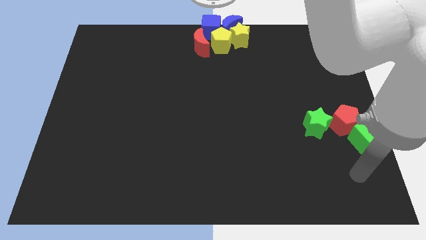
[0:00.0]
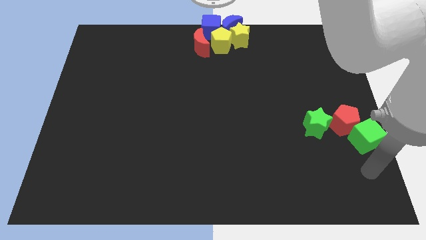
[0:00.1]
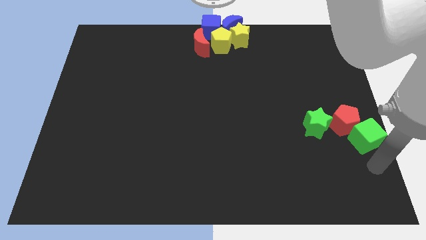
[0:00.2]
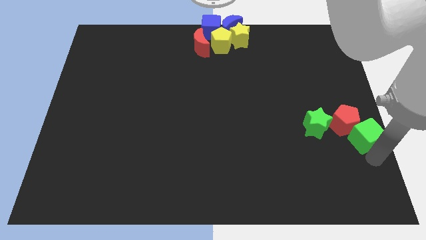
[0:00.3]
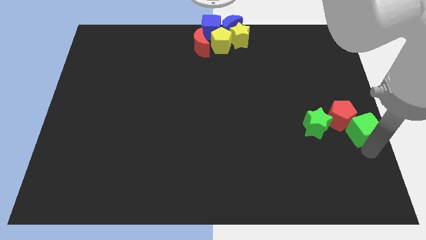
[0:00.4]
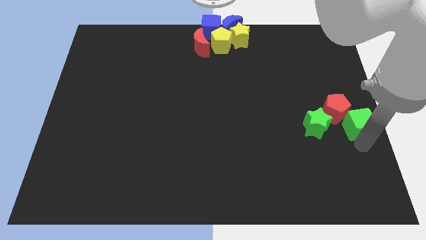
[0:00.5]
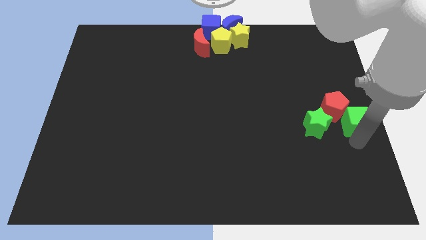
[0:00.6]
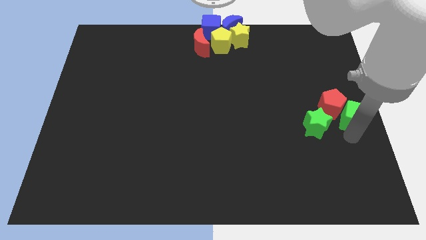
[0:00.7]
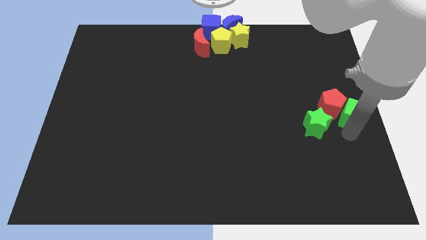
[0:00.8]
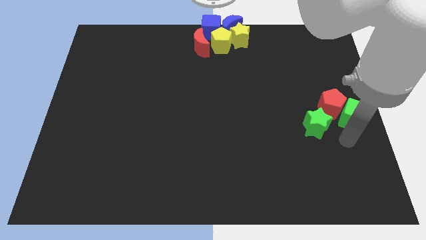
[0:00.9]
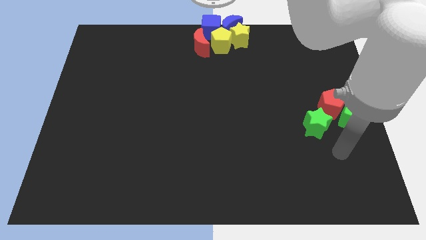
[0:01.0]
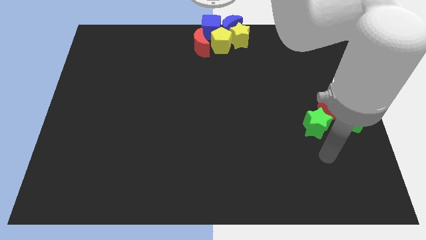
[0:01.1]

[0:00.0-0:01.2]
push the green cube into the red pentagon

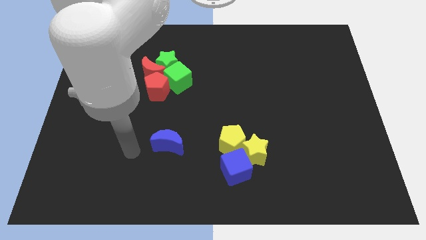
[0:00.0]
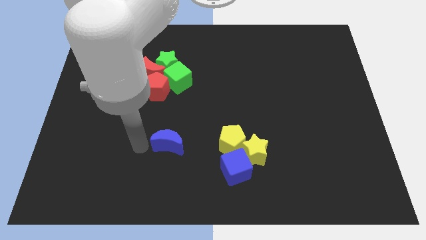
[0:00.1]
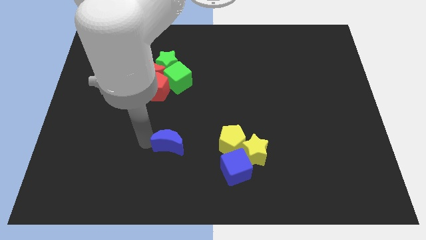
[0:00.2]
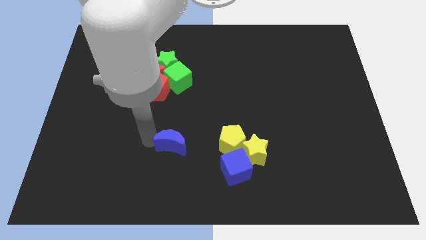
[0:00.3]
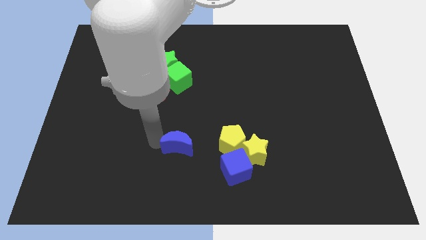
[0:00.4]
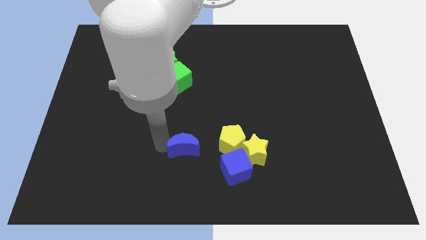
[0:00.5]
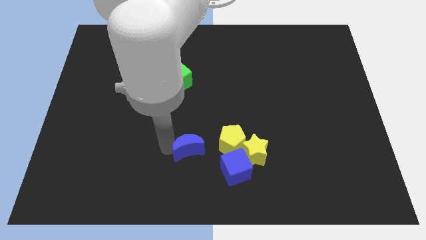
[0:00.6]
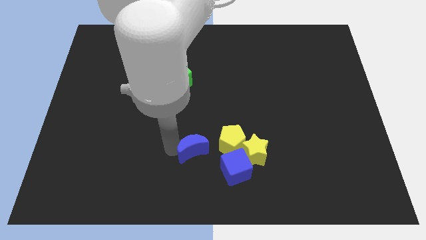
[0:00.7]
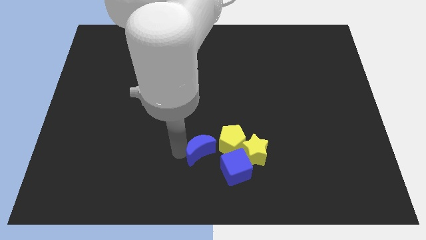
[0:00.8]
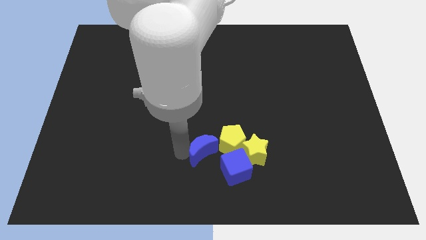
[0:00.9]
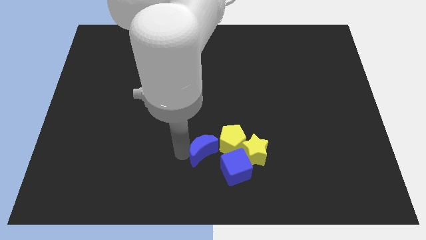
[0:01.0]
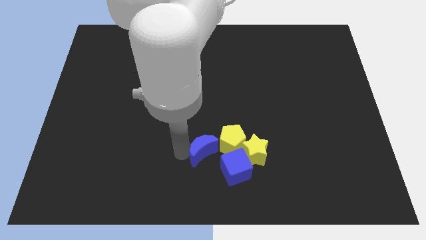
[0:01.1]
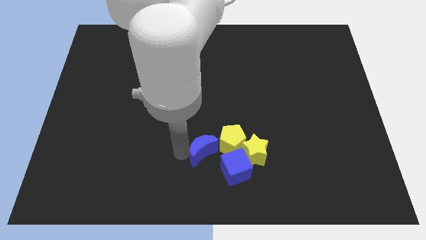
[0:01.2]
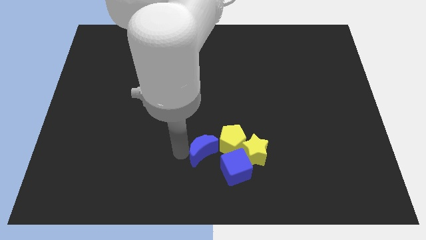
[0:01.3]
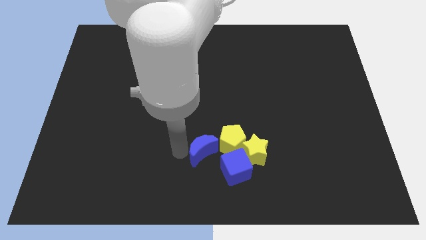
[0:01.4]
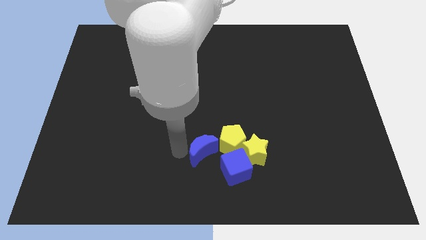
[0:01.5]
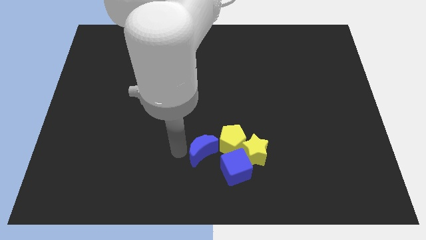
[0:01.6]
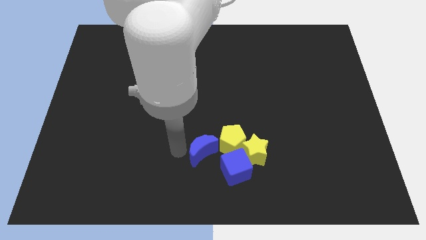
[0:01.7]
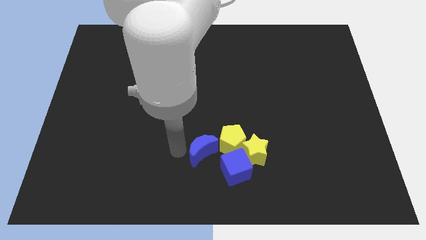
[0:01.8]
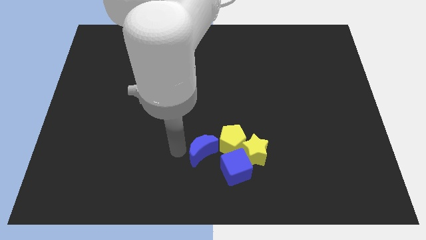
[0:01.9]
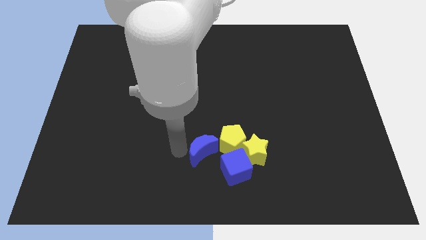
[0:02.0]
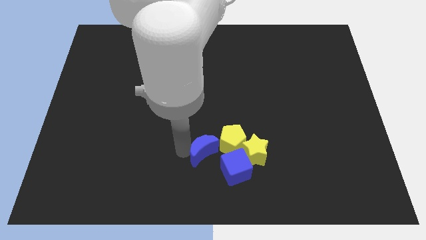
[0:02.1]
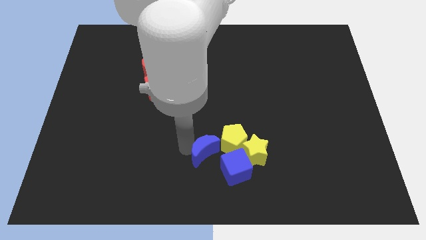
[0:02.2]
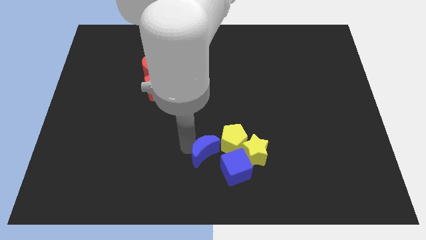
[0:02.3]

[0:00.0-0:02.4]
move the blue crescent left side of the yellow pentagon

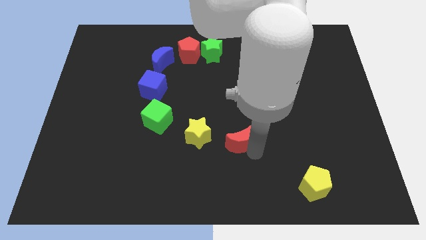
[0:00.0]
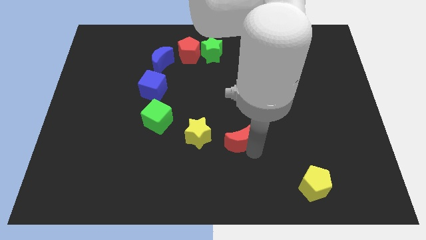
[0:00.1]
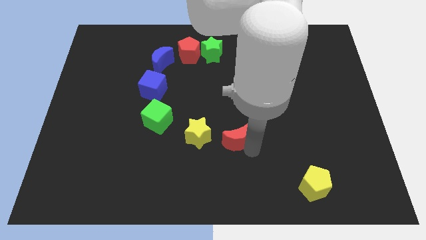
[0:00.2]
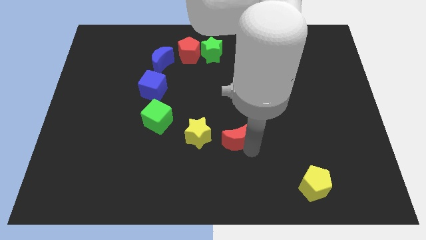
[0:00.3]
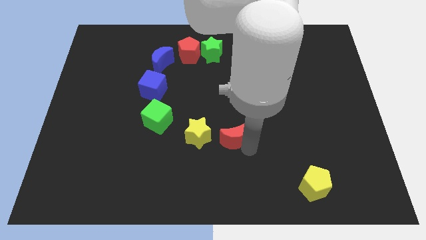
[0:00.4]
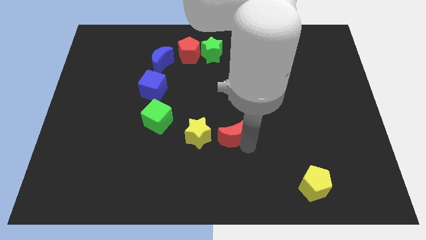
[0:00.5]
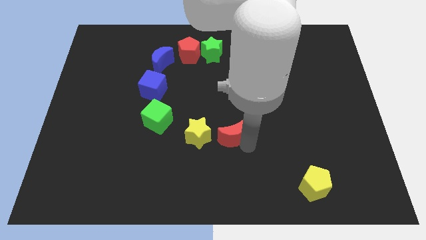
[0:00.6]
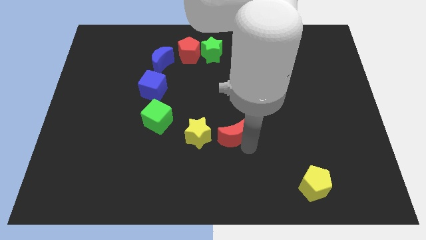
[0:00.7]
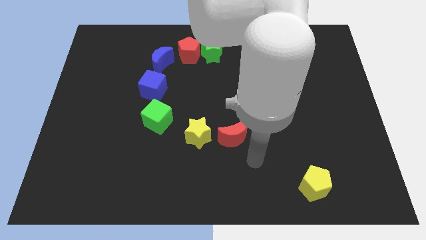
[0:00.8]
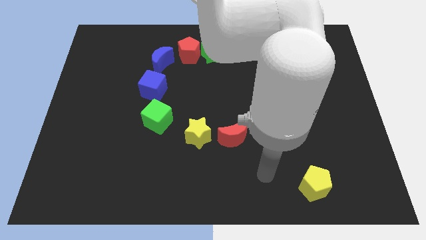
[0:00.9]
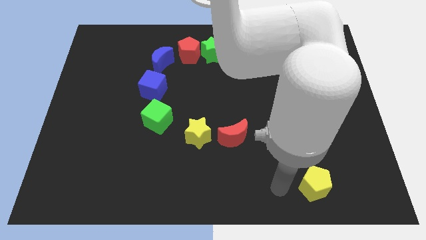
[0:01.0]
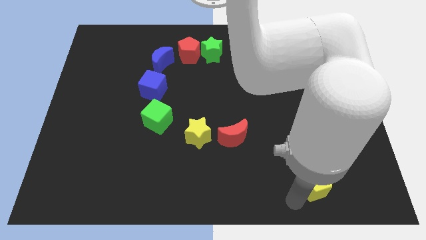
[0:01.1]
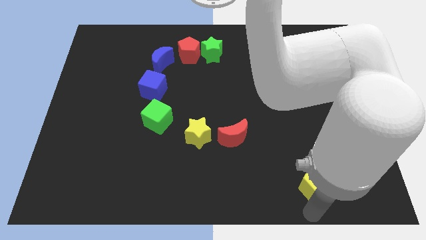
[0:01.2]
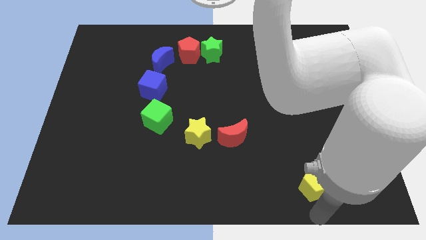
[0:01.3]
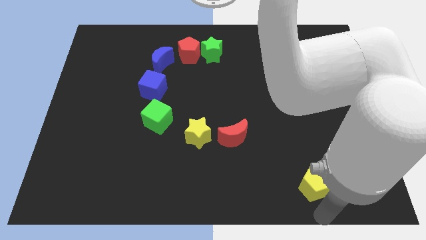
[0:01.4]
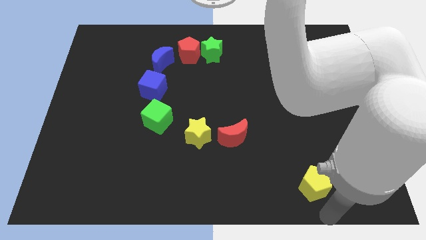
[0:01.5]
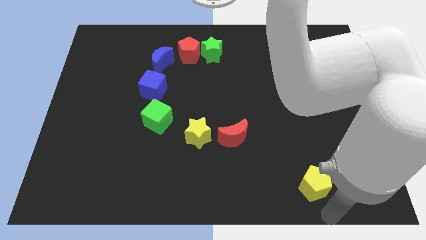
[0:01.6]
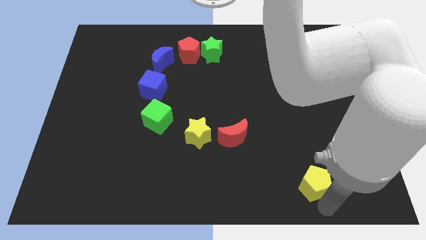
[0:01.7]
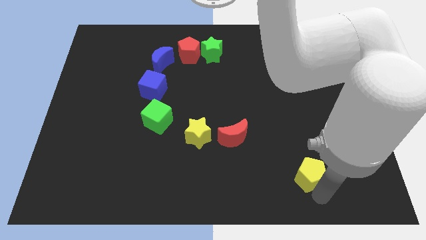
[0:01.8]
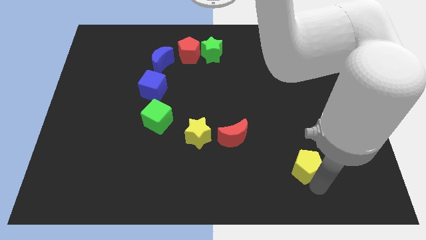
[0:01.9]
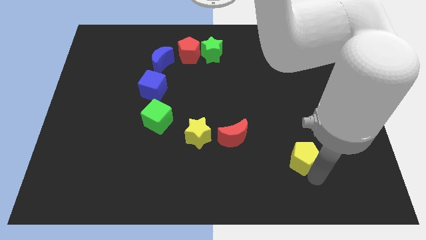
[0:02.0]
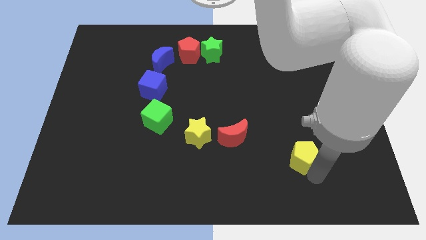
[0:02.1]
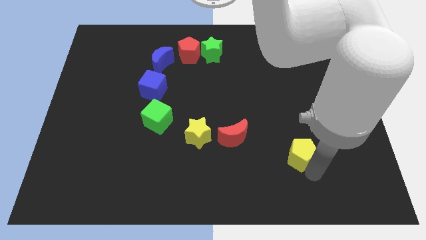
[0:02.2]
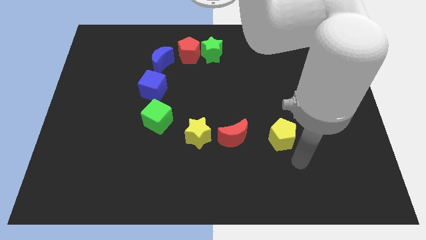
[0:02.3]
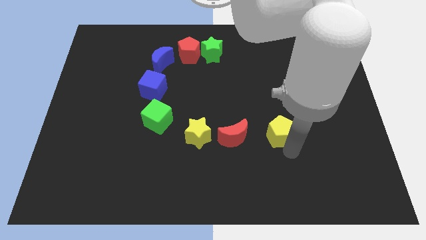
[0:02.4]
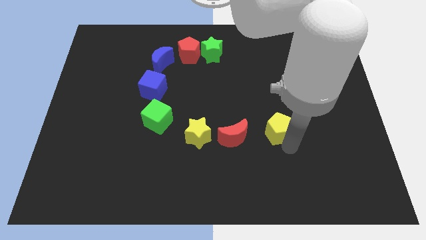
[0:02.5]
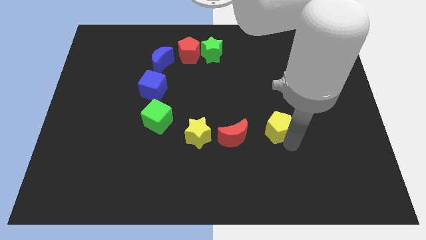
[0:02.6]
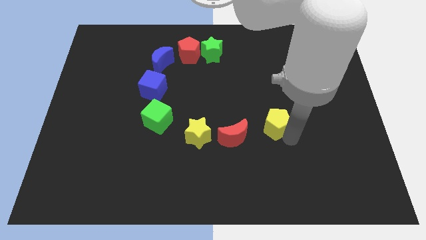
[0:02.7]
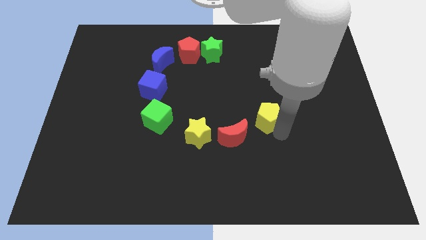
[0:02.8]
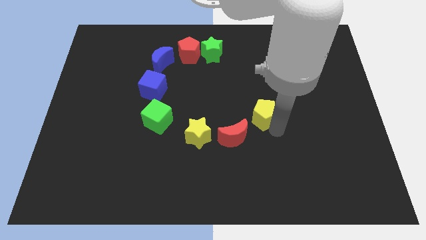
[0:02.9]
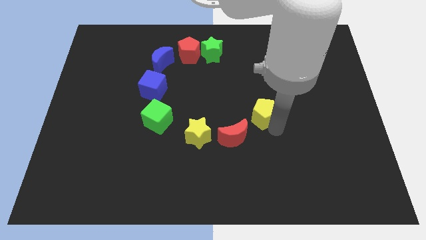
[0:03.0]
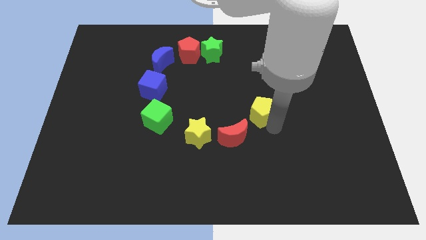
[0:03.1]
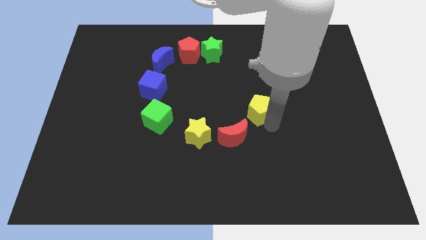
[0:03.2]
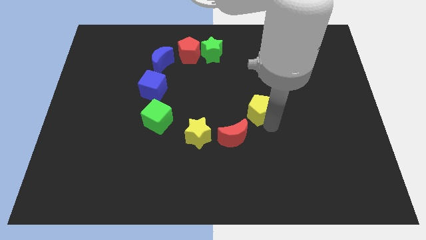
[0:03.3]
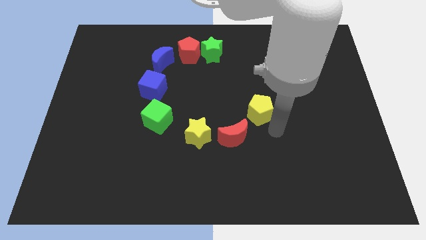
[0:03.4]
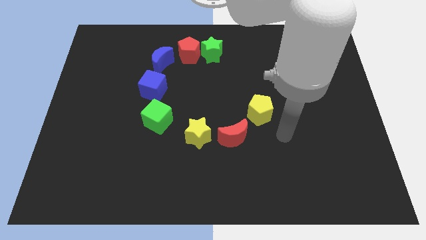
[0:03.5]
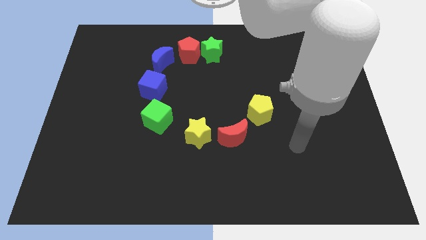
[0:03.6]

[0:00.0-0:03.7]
slide the yellow pentagon to the top right side of the red moon

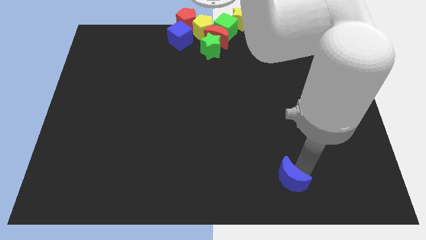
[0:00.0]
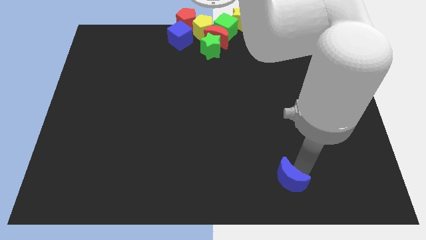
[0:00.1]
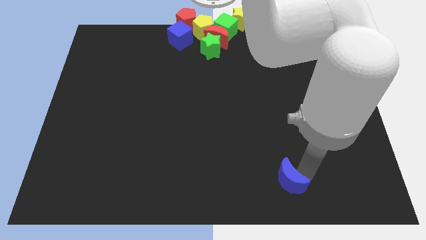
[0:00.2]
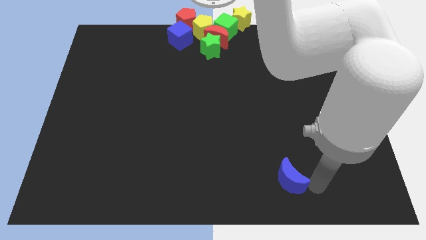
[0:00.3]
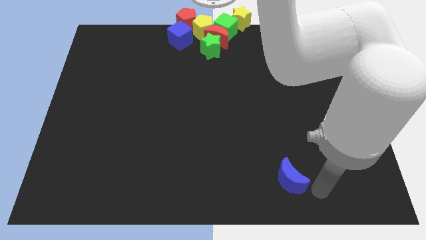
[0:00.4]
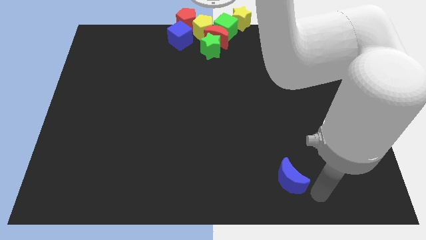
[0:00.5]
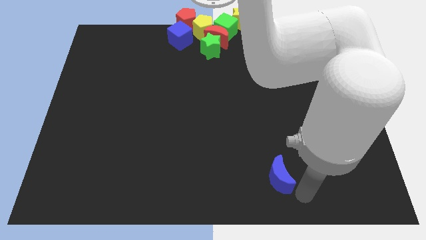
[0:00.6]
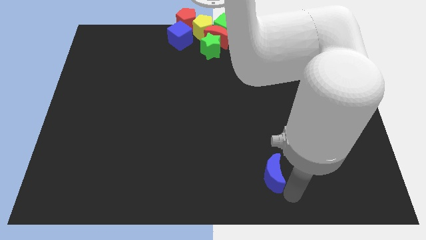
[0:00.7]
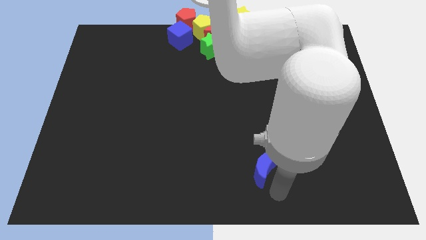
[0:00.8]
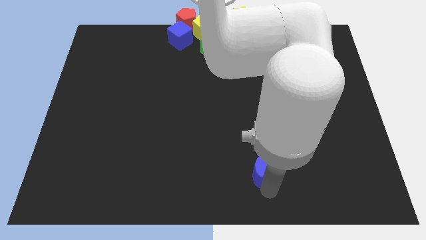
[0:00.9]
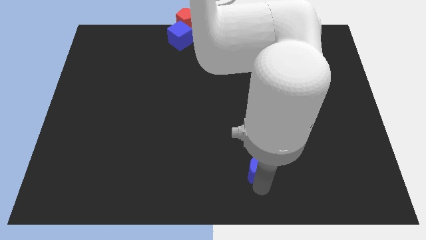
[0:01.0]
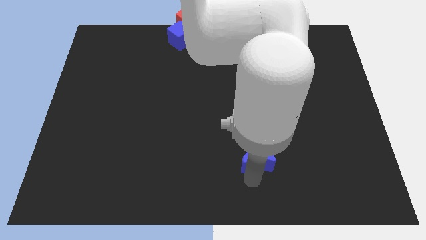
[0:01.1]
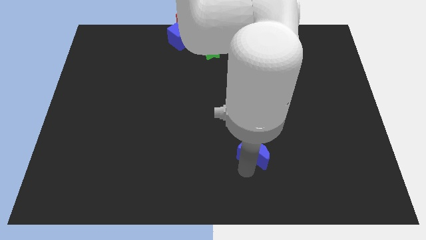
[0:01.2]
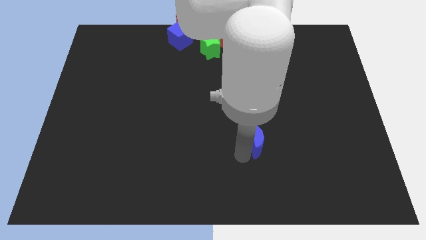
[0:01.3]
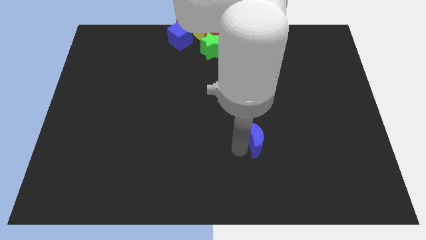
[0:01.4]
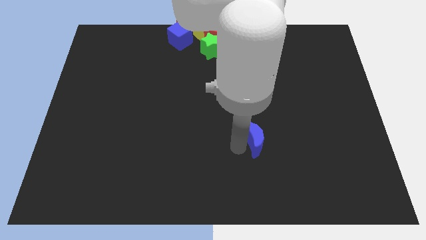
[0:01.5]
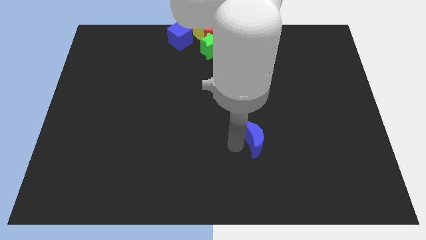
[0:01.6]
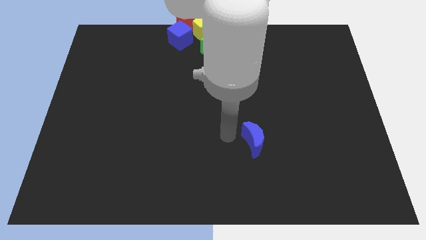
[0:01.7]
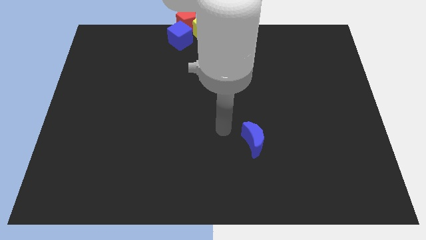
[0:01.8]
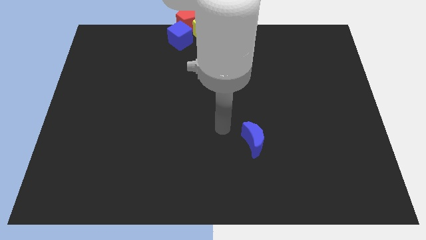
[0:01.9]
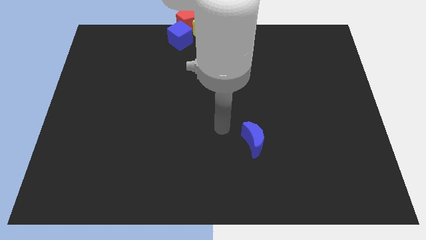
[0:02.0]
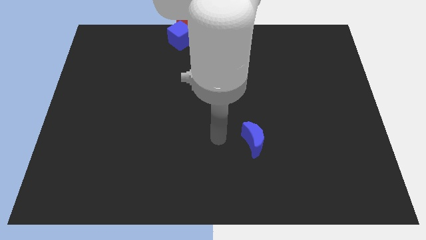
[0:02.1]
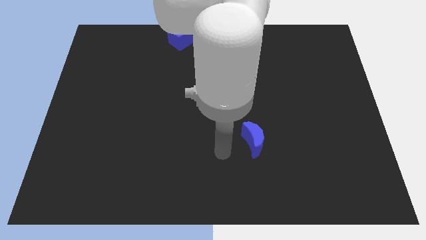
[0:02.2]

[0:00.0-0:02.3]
slightly push the blue moon to the center
